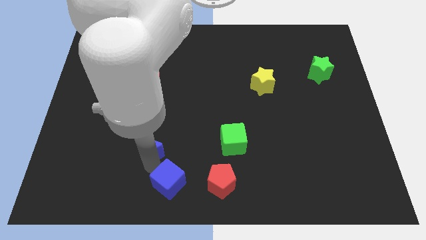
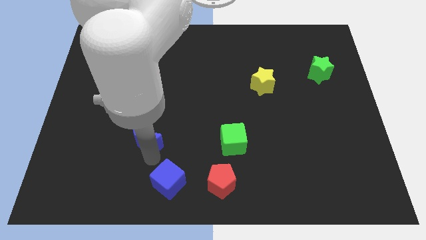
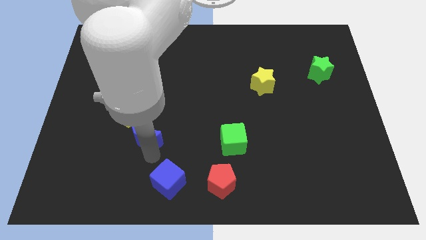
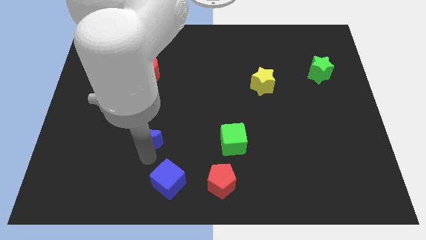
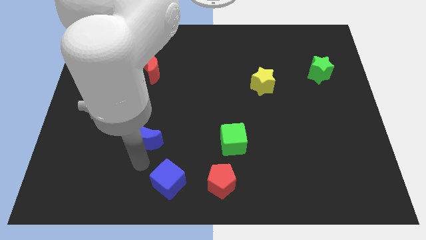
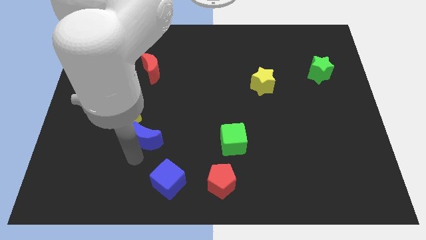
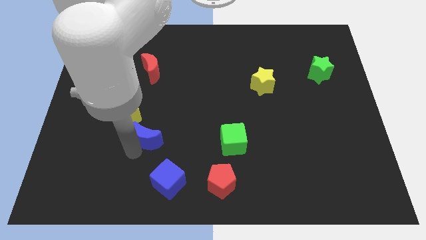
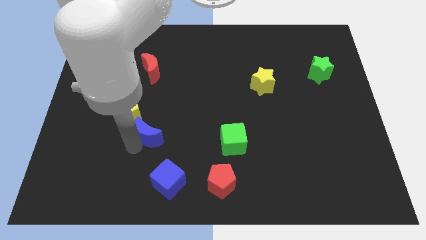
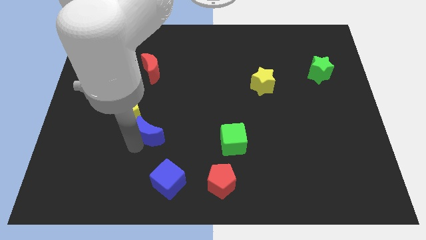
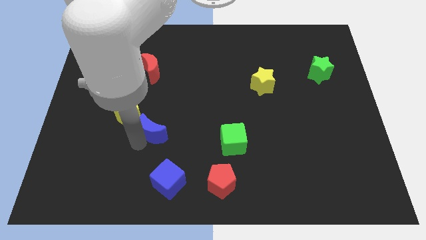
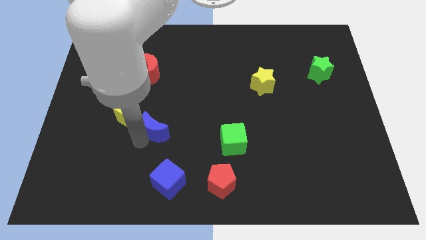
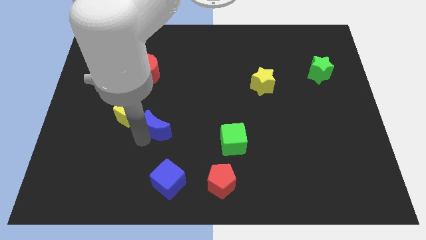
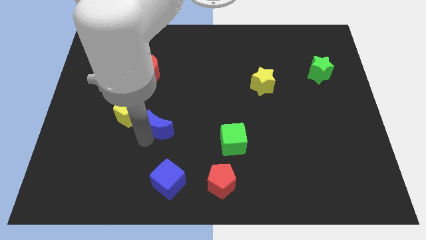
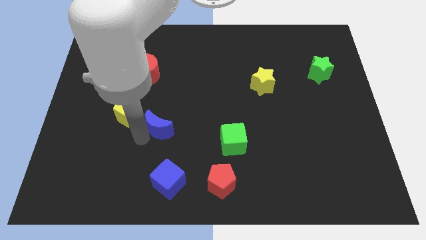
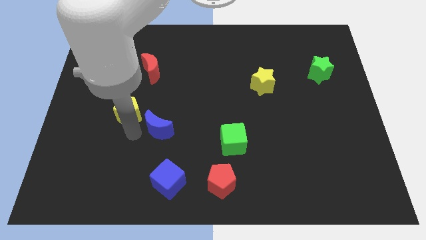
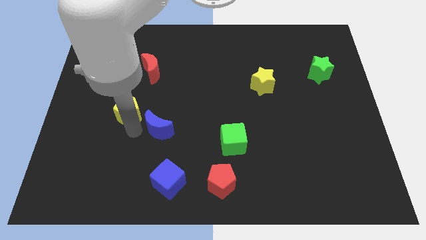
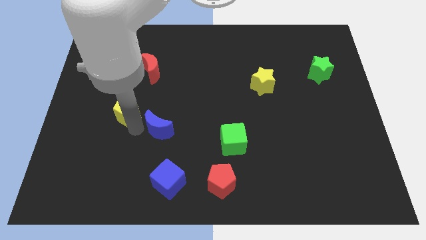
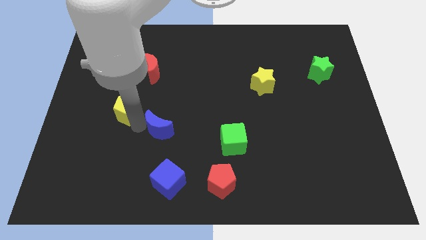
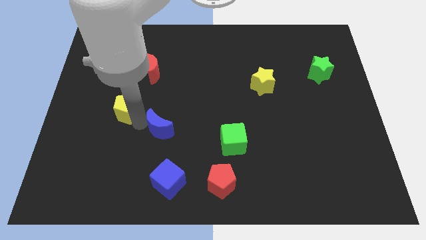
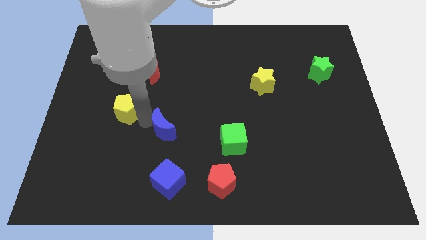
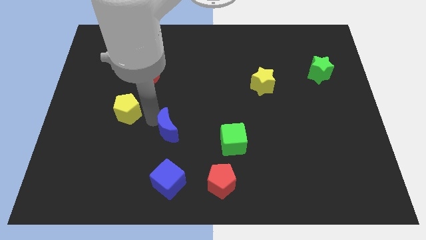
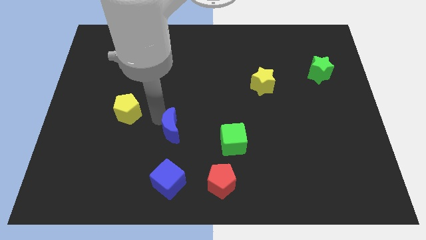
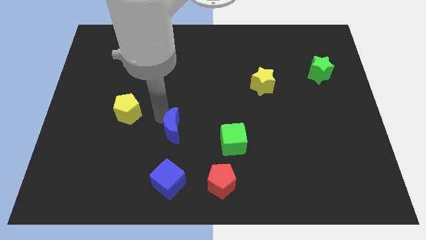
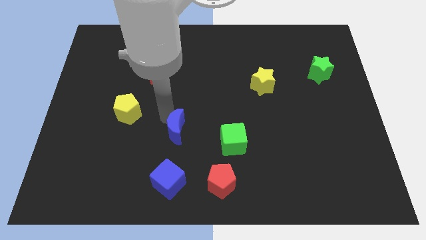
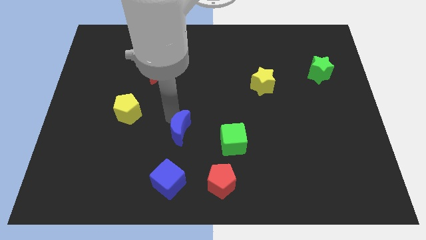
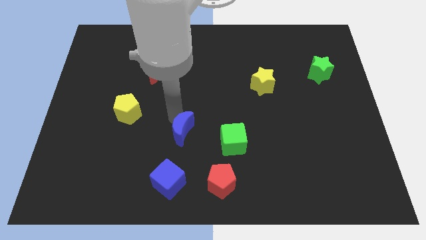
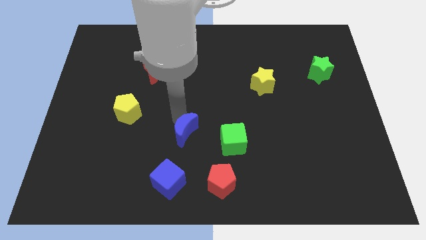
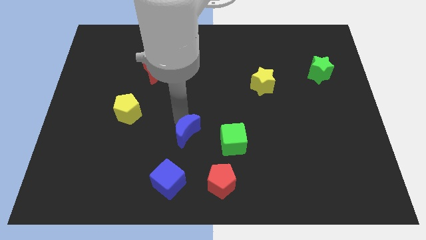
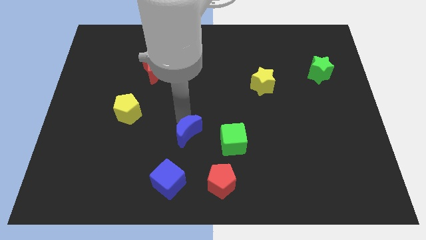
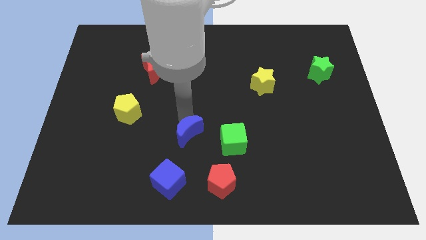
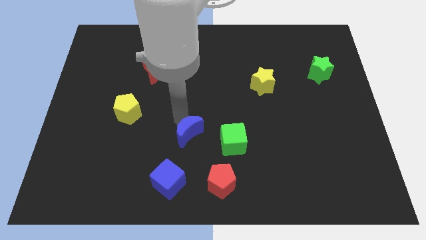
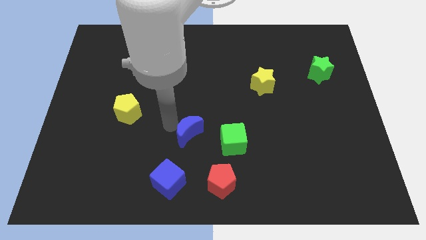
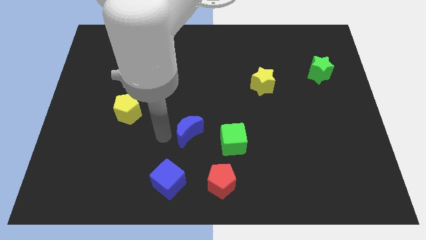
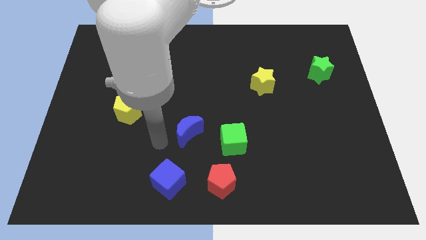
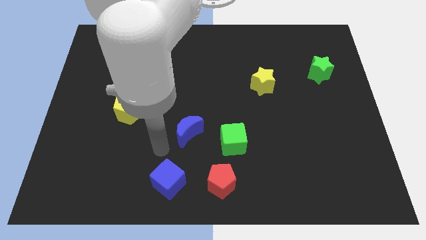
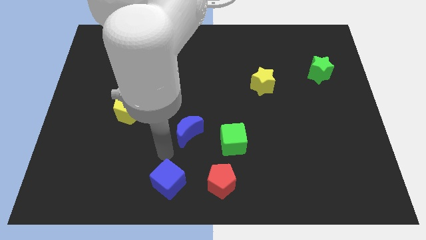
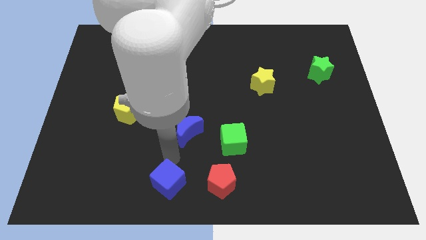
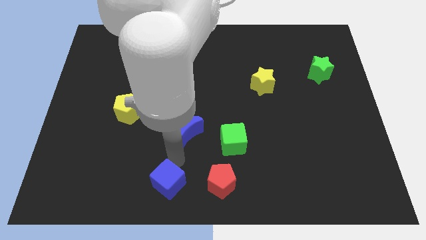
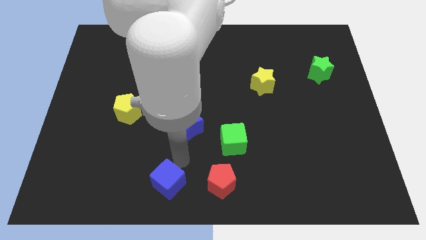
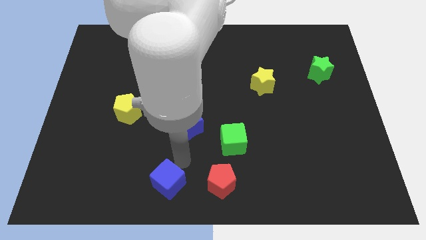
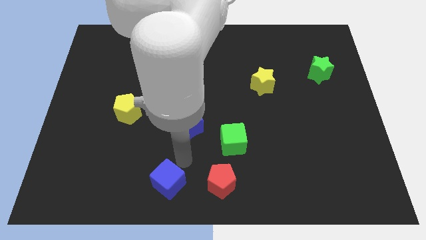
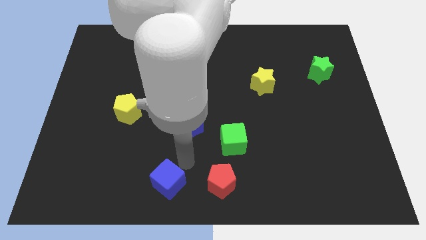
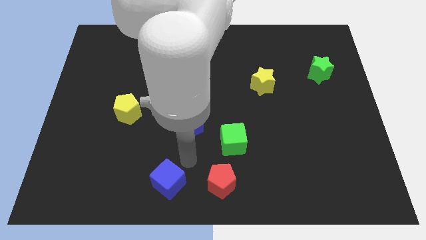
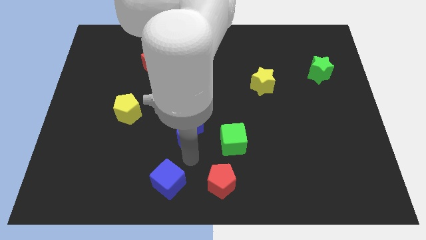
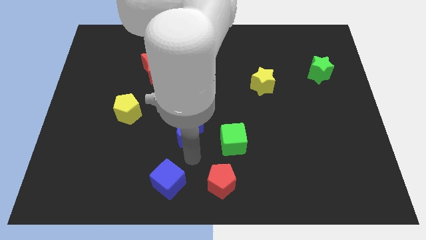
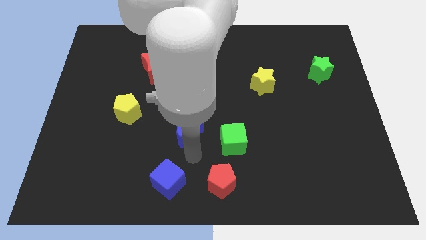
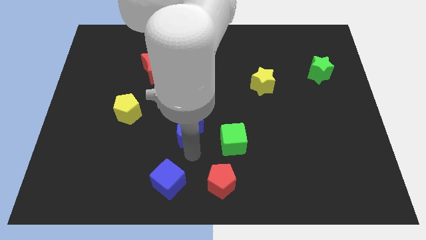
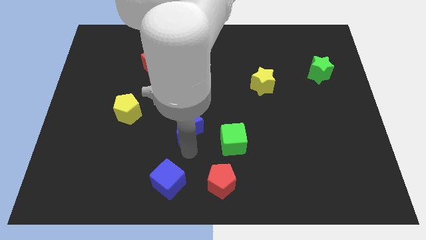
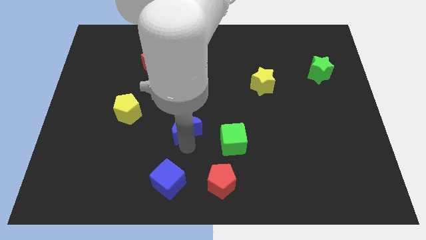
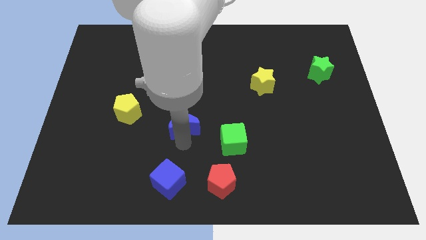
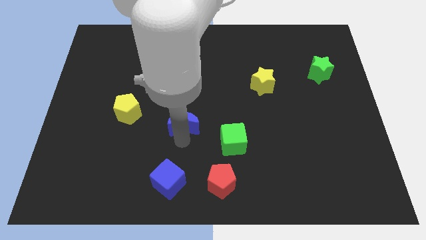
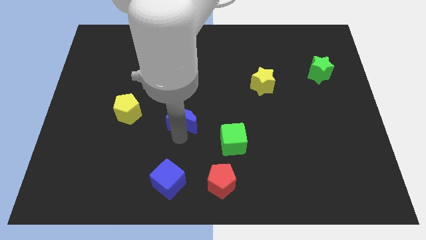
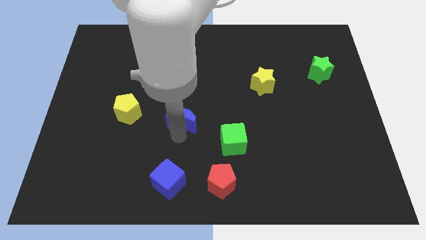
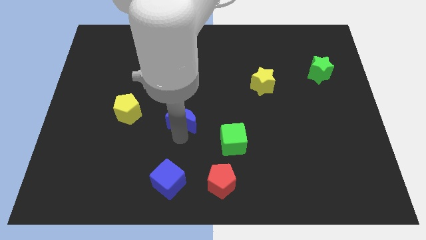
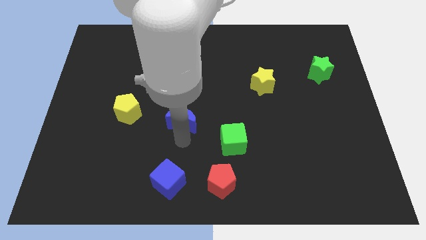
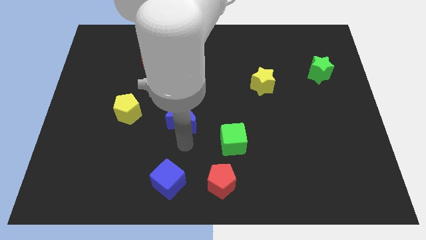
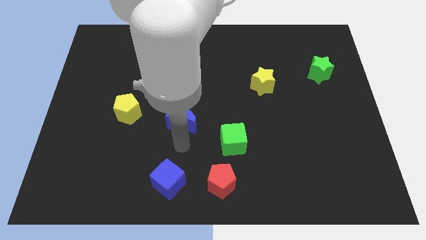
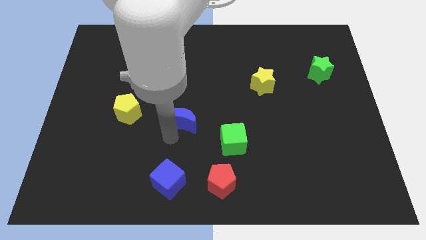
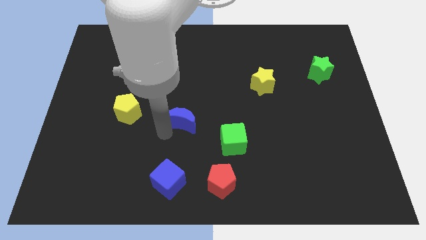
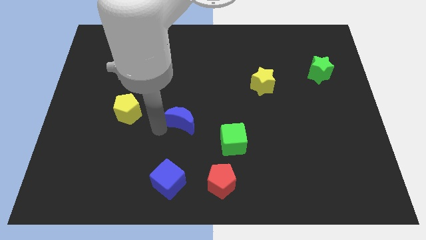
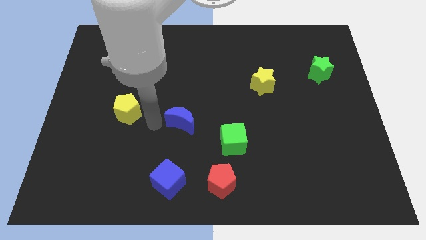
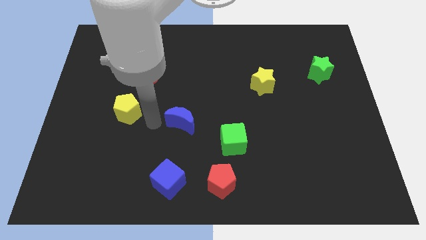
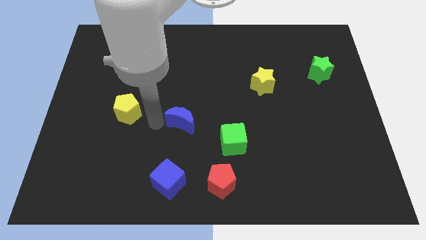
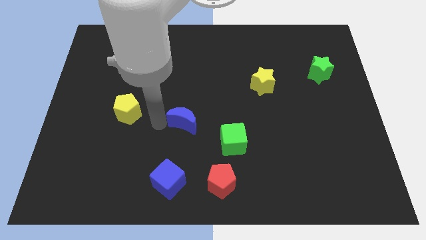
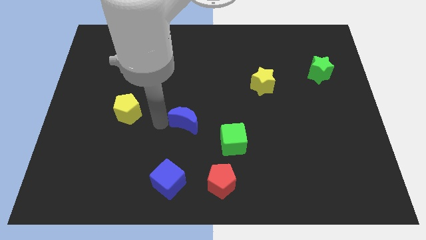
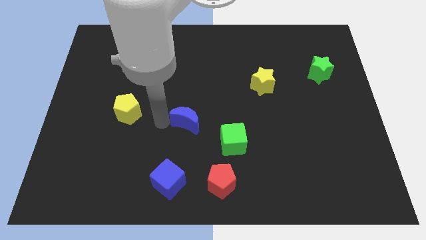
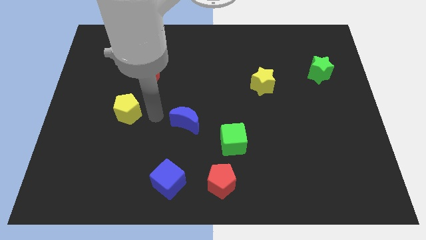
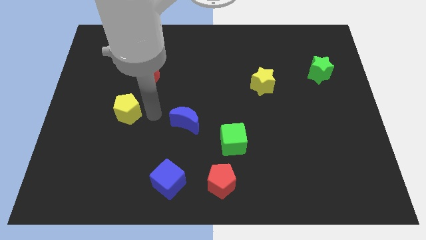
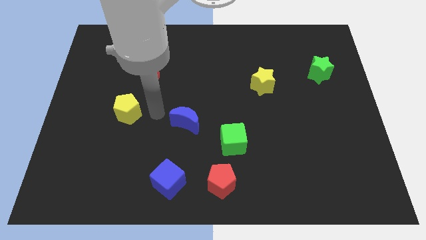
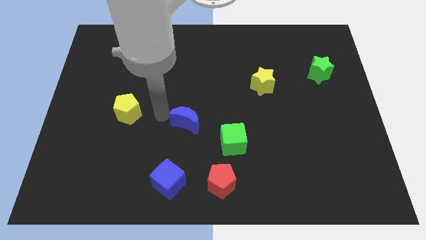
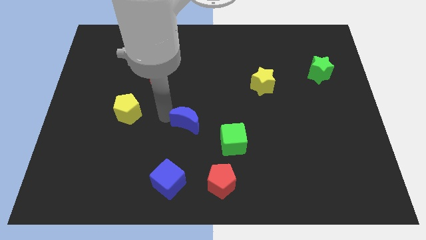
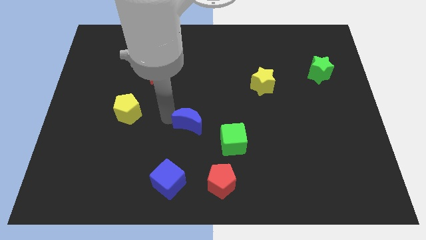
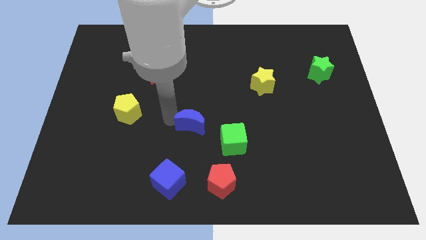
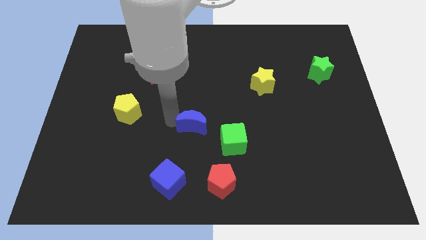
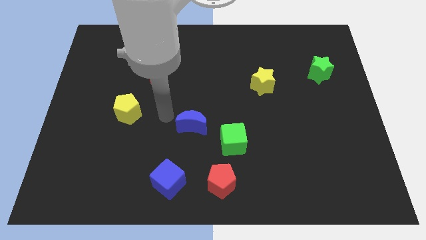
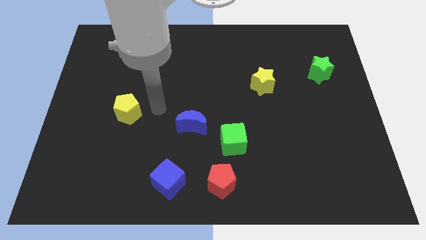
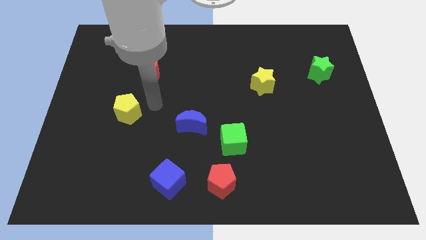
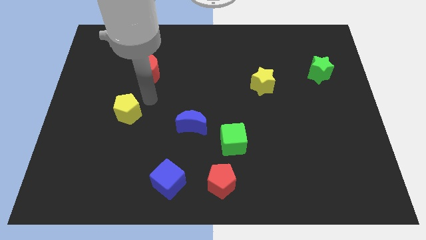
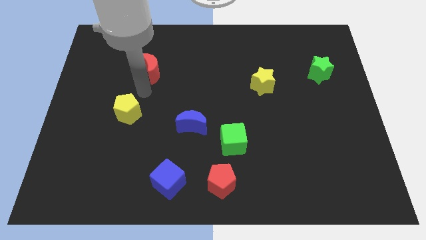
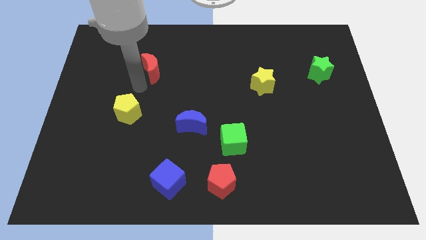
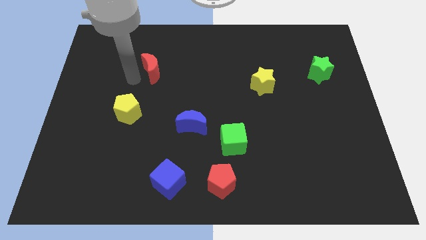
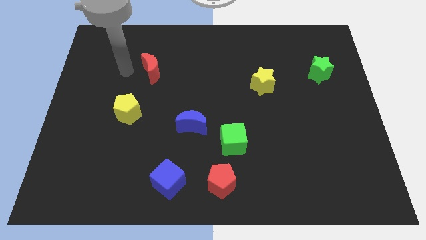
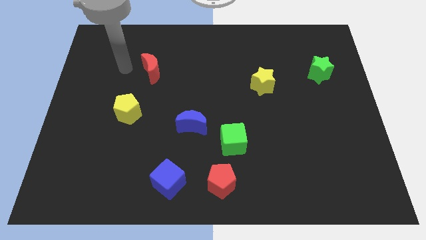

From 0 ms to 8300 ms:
place the blue moon parallel to the yellow pentagon

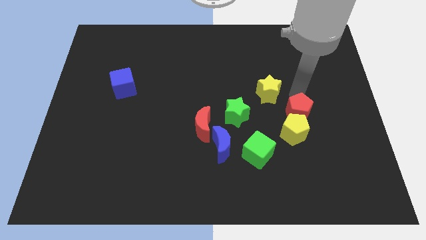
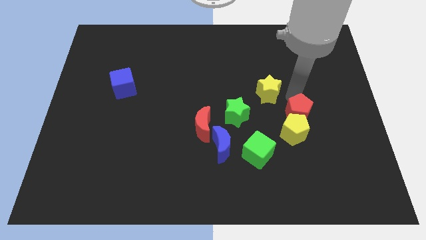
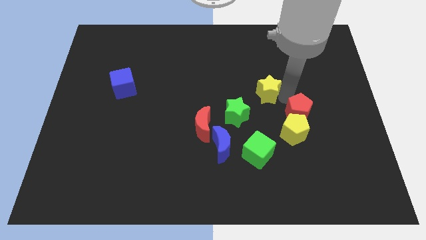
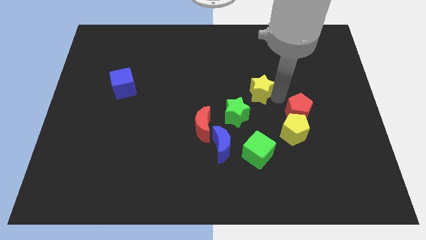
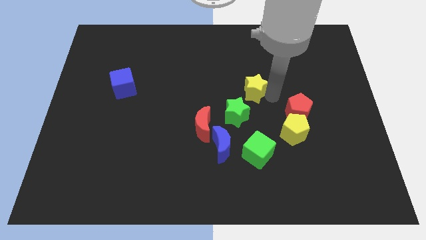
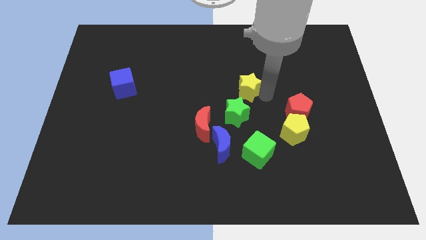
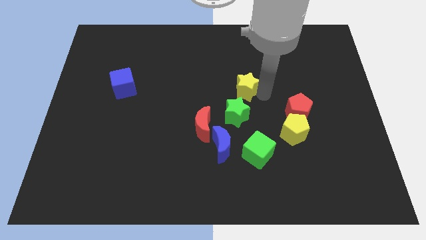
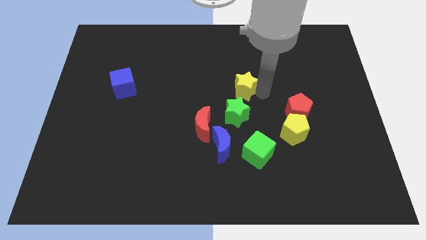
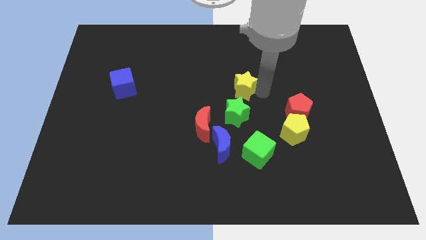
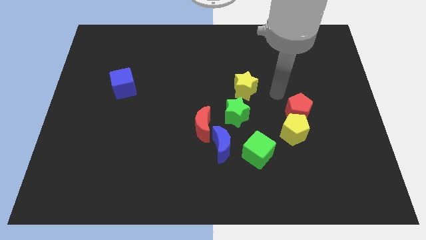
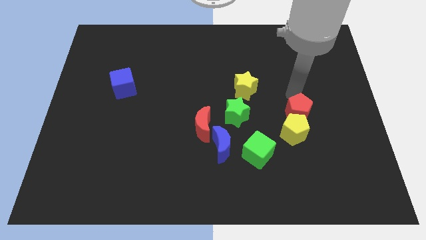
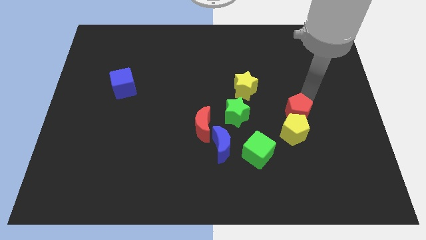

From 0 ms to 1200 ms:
slide the yellow star slightly to the left
